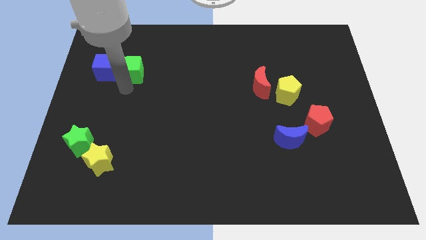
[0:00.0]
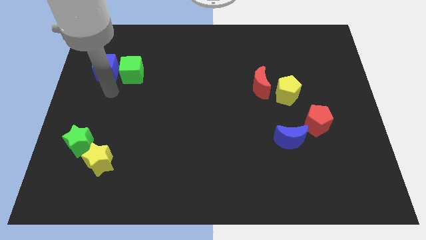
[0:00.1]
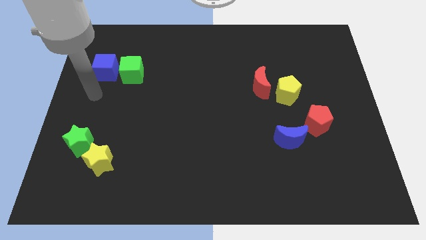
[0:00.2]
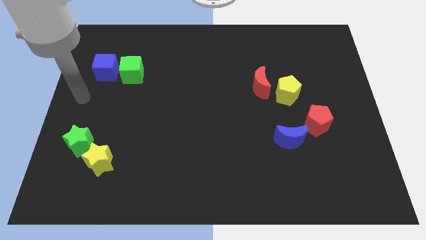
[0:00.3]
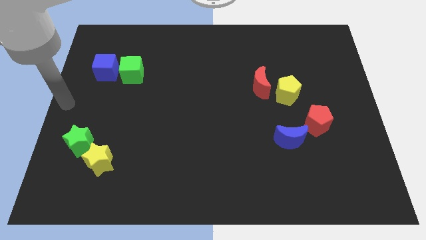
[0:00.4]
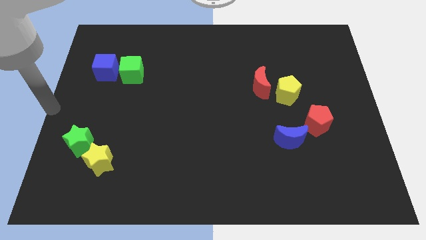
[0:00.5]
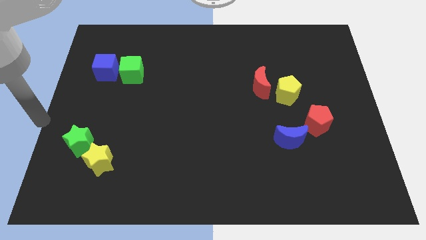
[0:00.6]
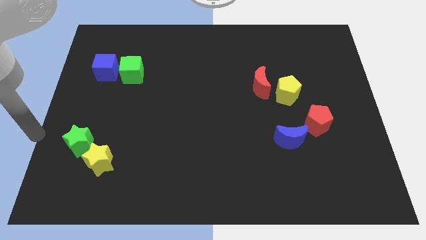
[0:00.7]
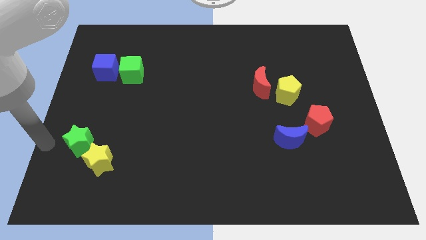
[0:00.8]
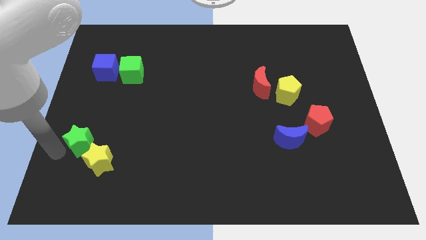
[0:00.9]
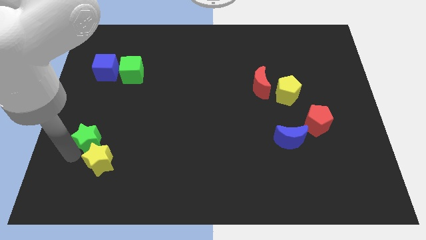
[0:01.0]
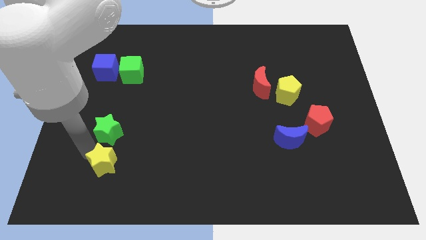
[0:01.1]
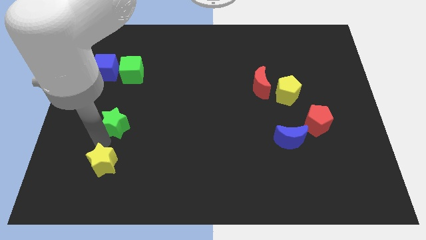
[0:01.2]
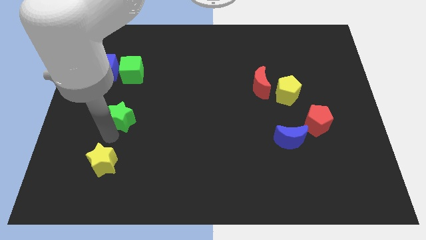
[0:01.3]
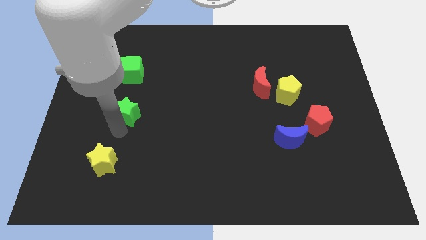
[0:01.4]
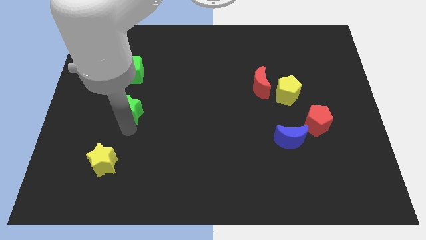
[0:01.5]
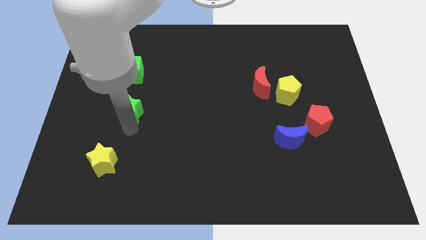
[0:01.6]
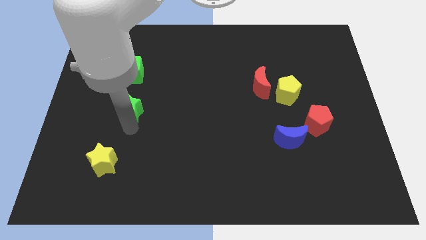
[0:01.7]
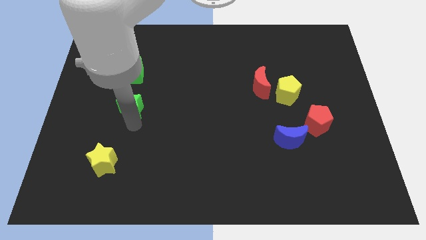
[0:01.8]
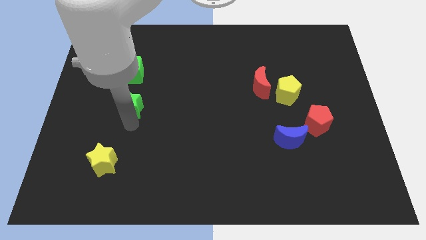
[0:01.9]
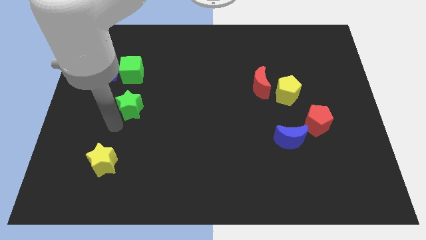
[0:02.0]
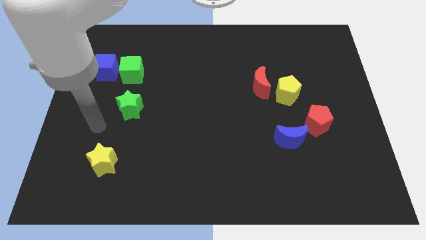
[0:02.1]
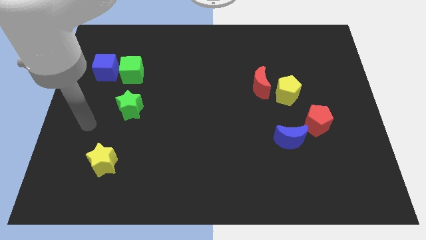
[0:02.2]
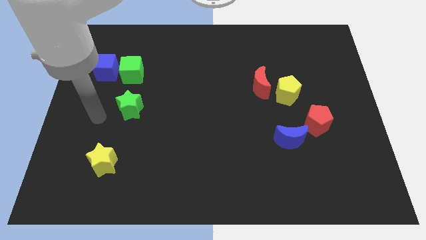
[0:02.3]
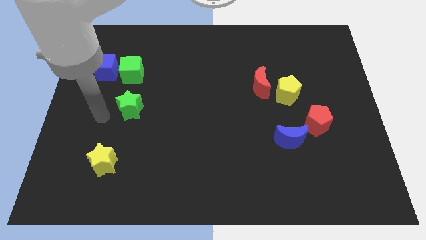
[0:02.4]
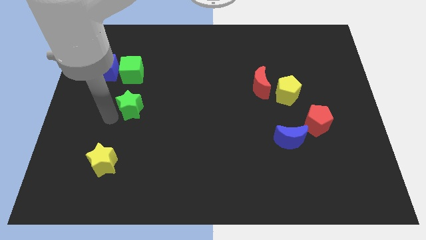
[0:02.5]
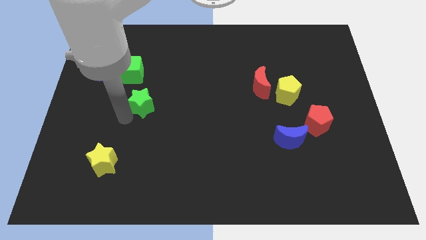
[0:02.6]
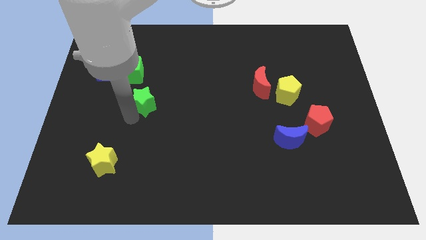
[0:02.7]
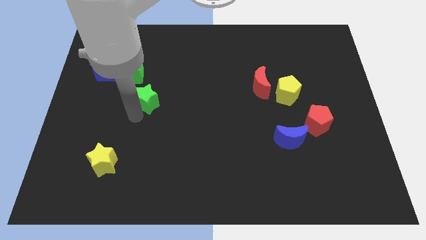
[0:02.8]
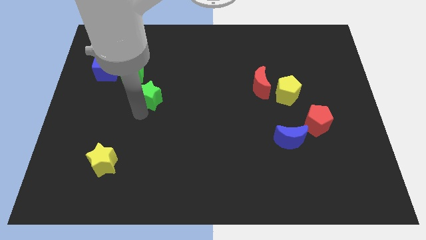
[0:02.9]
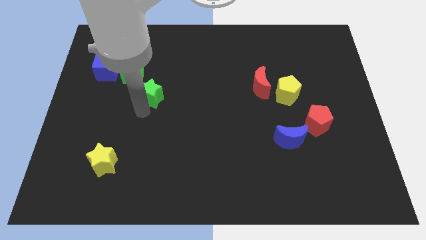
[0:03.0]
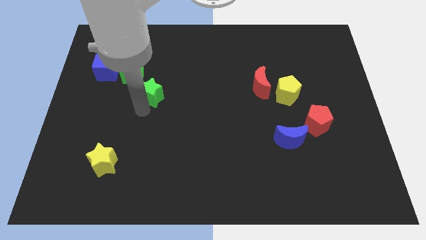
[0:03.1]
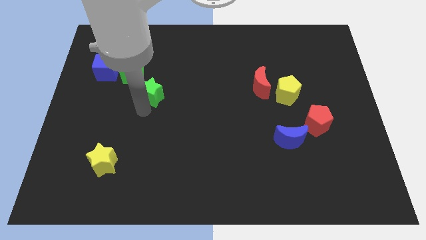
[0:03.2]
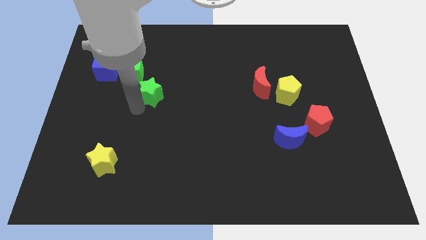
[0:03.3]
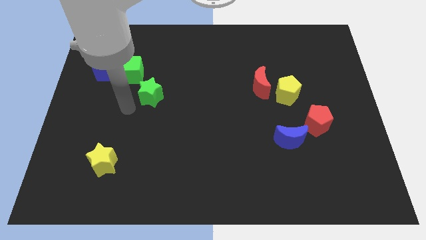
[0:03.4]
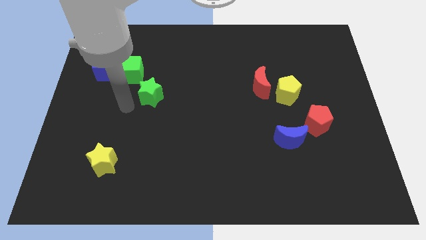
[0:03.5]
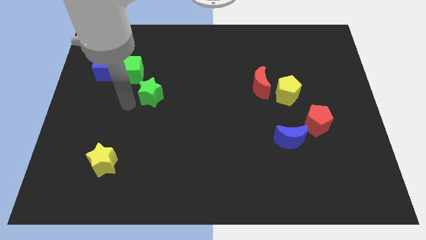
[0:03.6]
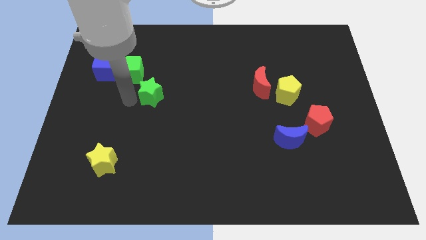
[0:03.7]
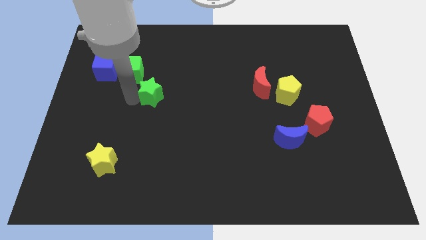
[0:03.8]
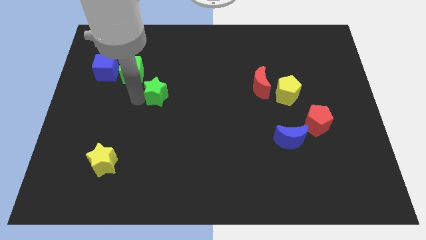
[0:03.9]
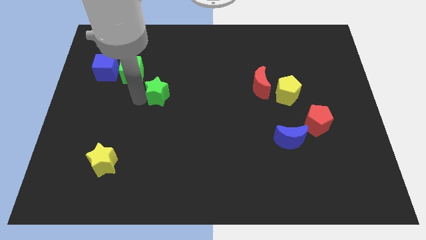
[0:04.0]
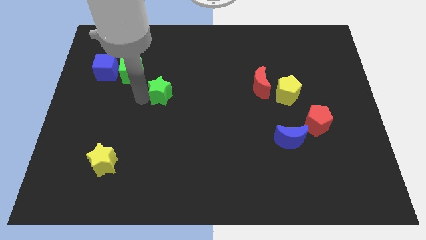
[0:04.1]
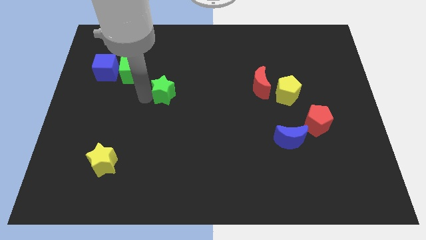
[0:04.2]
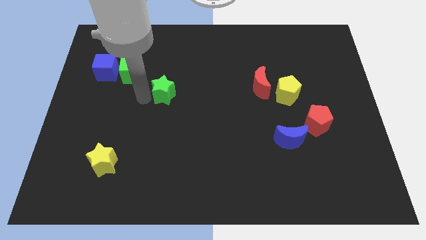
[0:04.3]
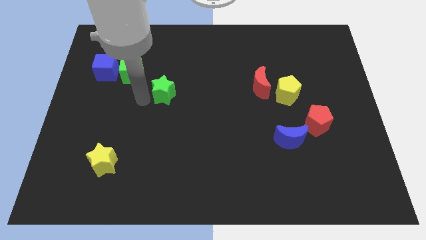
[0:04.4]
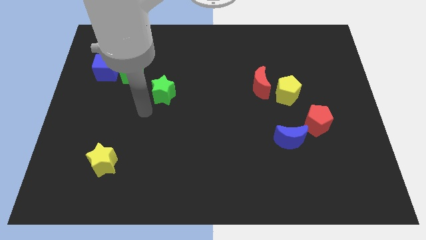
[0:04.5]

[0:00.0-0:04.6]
separate green cube from the yellow star

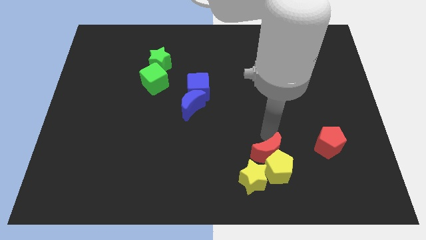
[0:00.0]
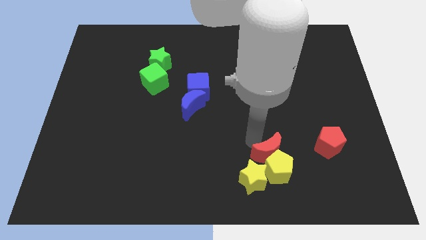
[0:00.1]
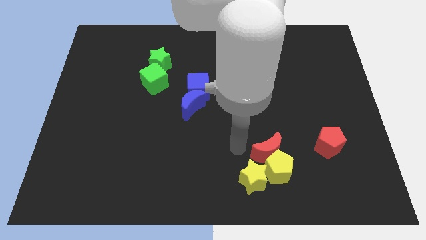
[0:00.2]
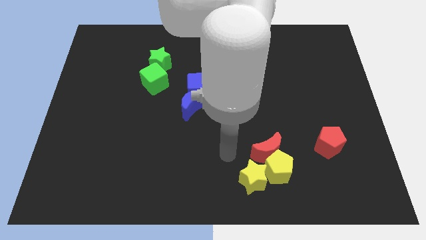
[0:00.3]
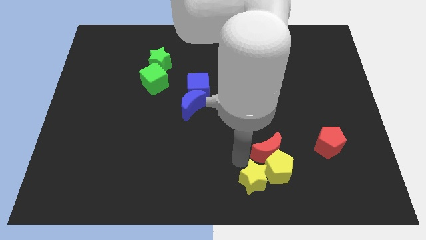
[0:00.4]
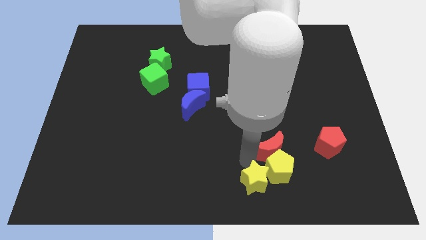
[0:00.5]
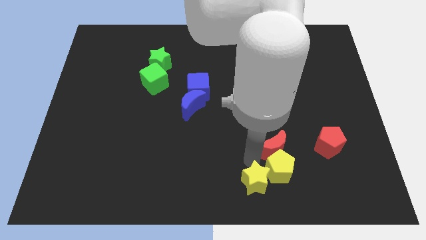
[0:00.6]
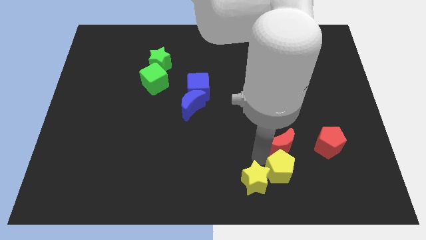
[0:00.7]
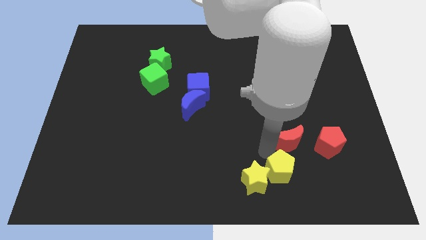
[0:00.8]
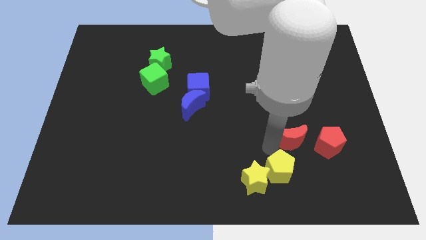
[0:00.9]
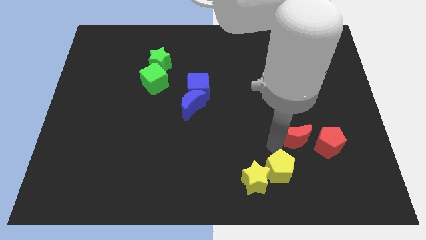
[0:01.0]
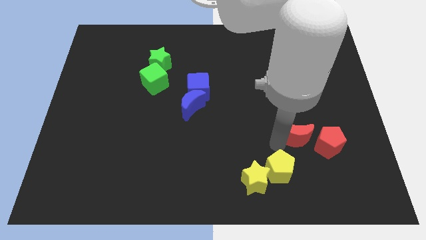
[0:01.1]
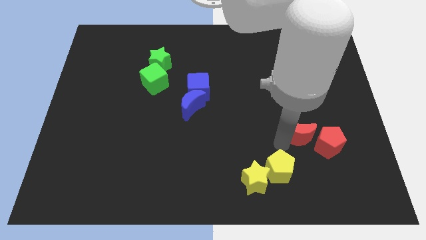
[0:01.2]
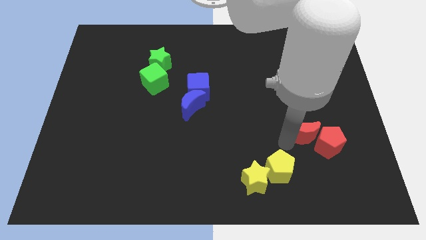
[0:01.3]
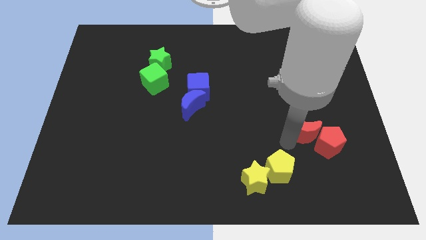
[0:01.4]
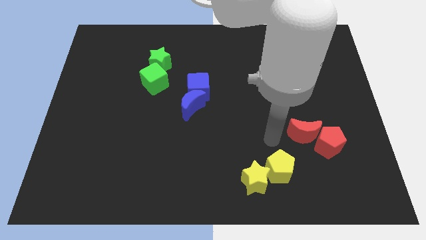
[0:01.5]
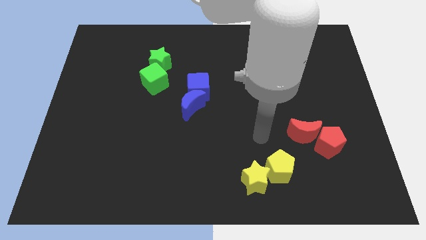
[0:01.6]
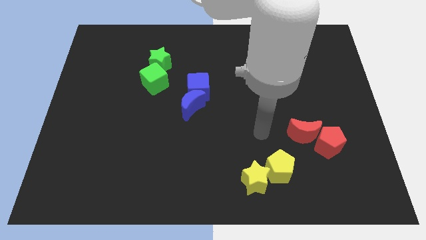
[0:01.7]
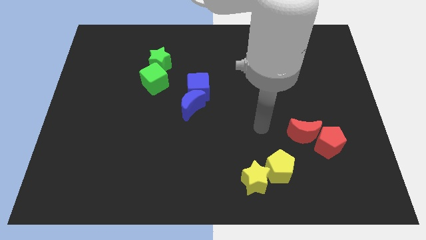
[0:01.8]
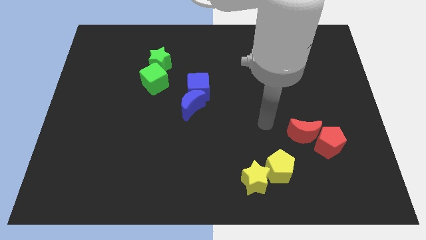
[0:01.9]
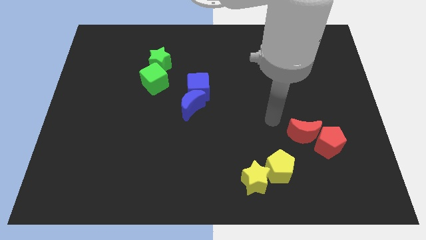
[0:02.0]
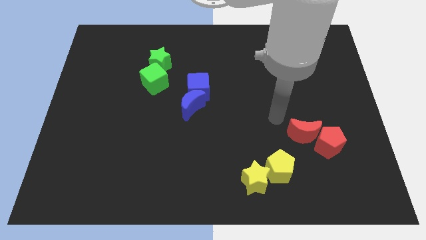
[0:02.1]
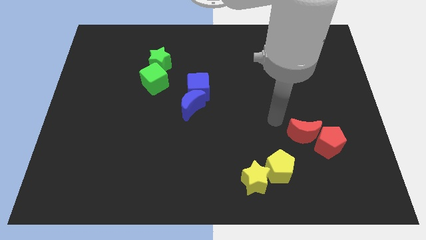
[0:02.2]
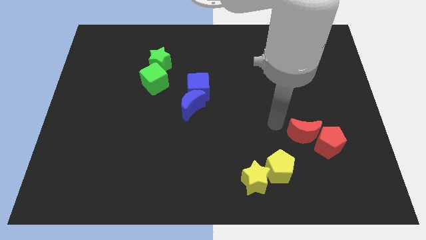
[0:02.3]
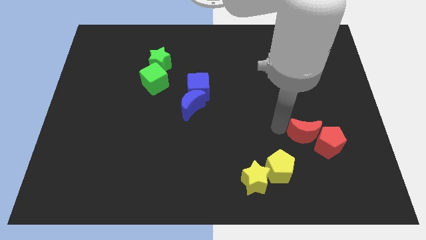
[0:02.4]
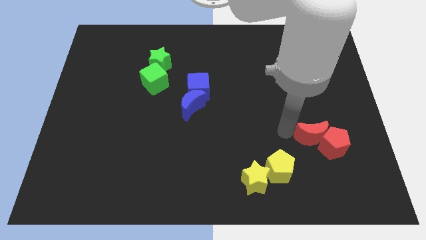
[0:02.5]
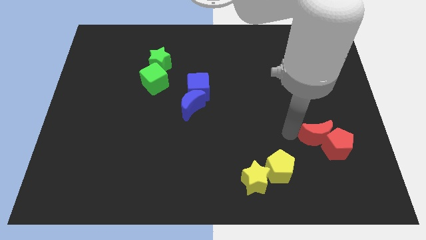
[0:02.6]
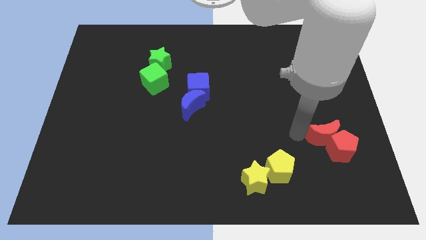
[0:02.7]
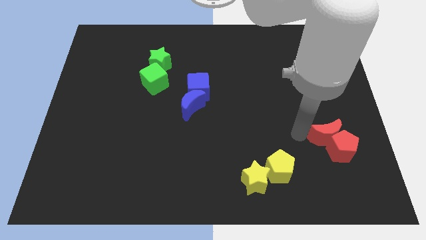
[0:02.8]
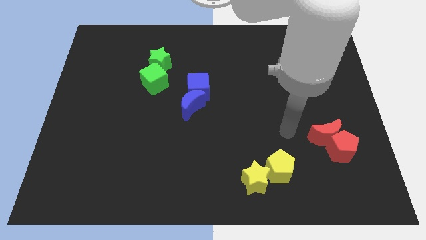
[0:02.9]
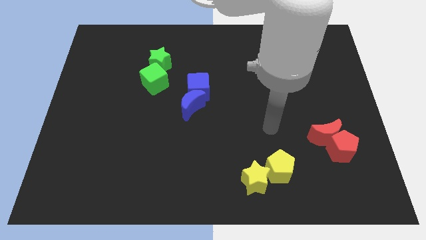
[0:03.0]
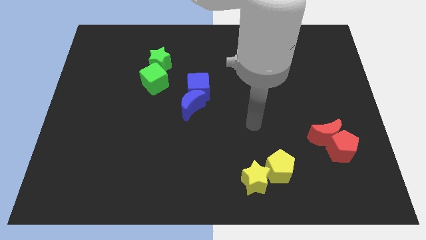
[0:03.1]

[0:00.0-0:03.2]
place red crescent above red pentagon

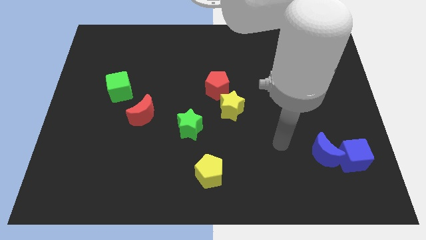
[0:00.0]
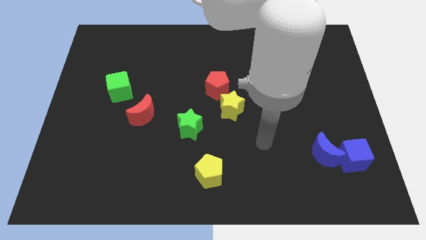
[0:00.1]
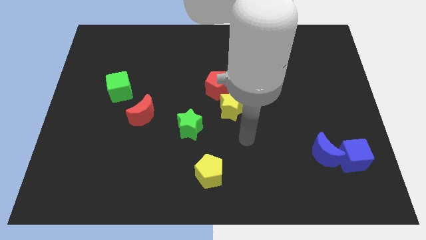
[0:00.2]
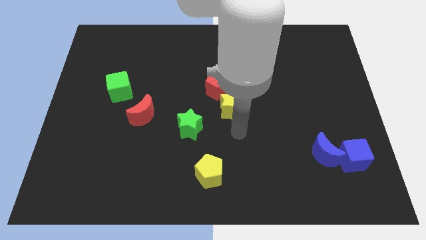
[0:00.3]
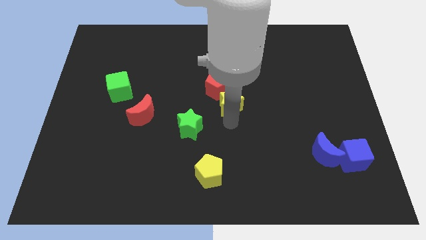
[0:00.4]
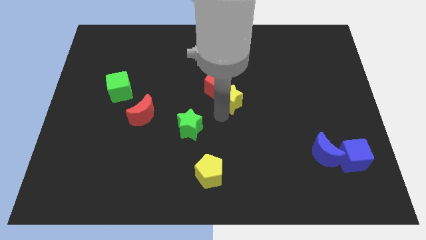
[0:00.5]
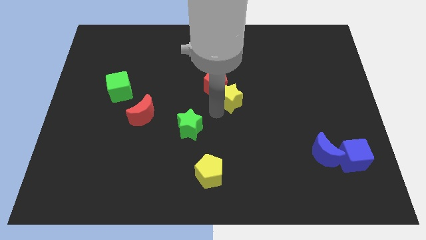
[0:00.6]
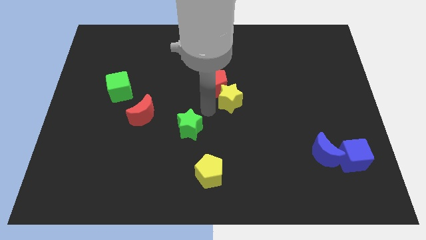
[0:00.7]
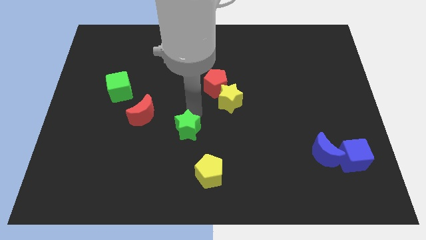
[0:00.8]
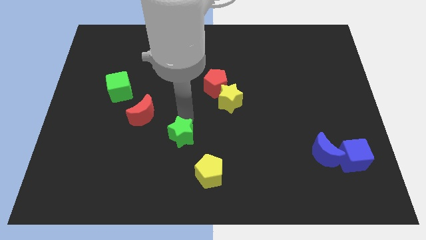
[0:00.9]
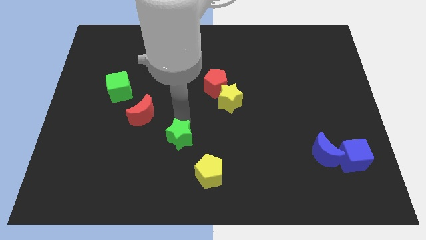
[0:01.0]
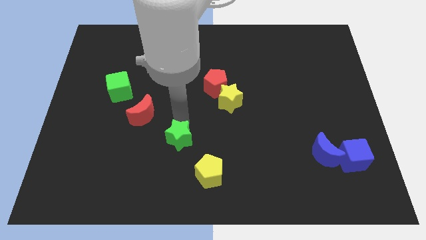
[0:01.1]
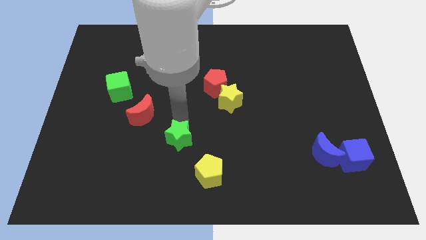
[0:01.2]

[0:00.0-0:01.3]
push the green star slightly downwards
